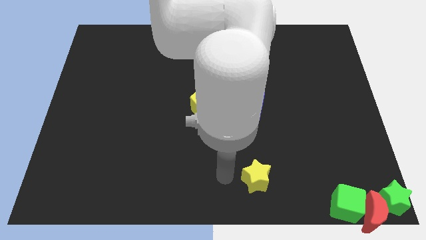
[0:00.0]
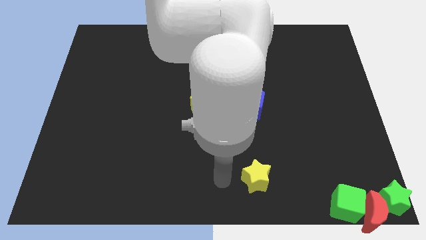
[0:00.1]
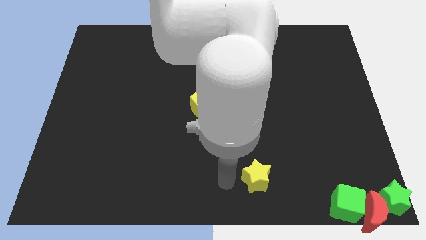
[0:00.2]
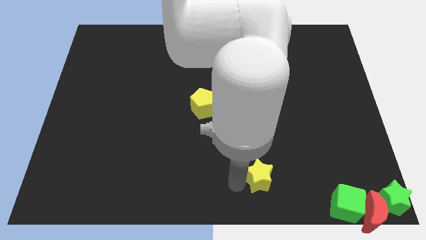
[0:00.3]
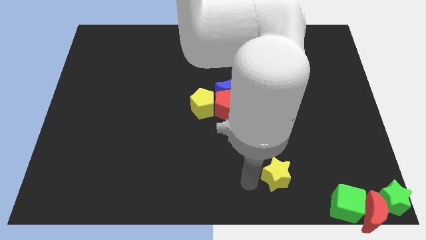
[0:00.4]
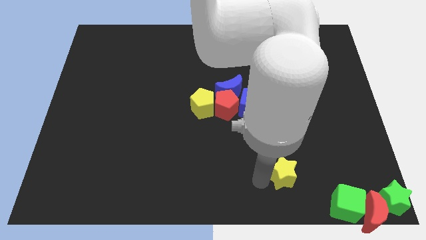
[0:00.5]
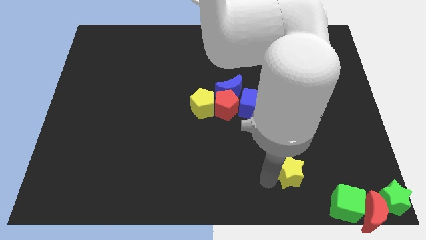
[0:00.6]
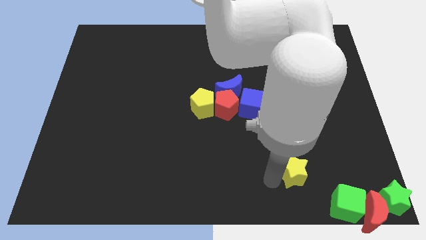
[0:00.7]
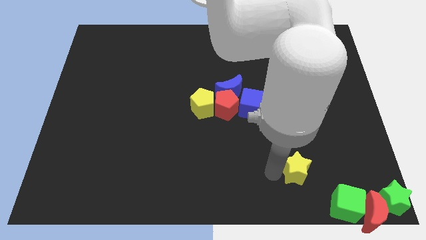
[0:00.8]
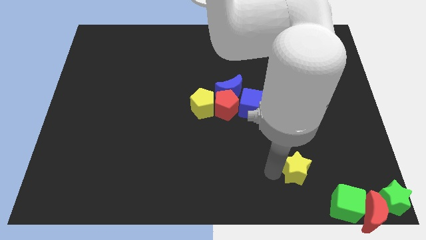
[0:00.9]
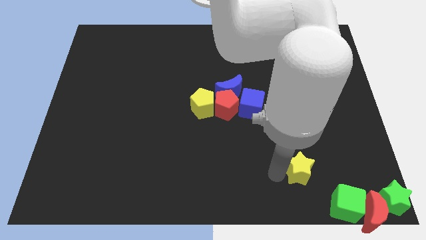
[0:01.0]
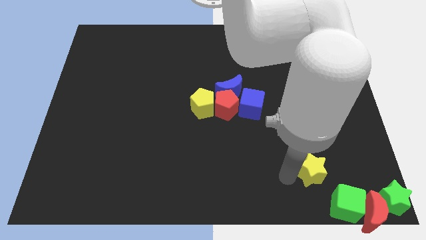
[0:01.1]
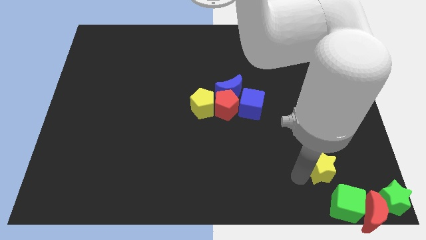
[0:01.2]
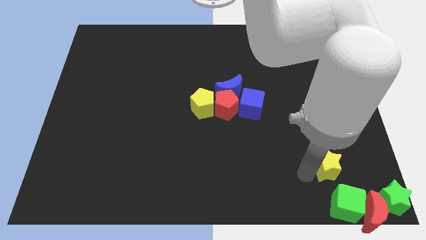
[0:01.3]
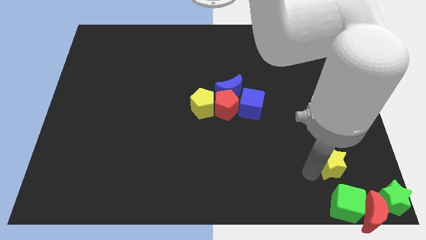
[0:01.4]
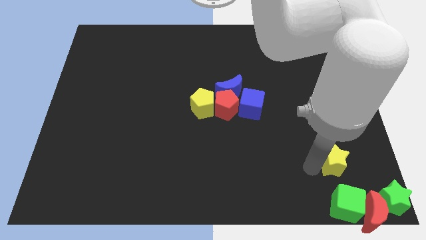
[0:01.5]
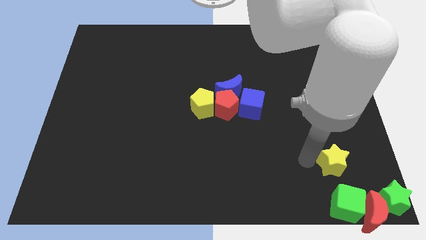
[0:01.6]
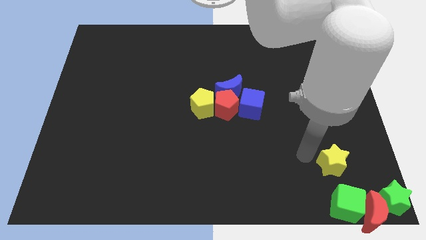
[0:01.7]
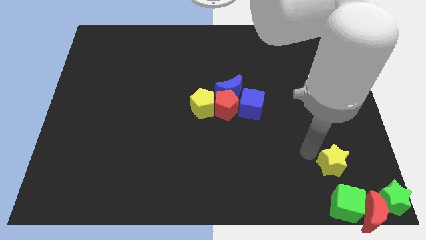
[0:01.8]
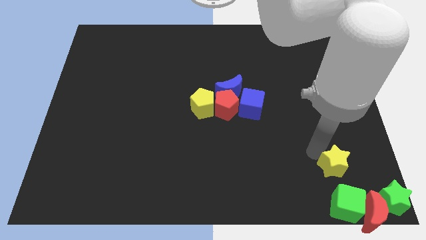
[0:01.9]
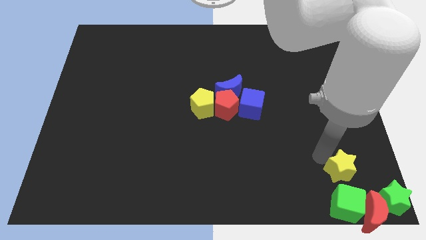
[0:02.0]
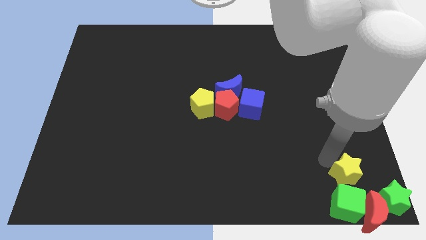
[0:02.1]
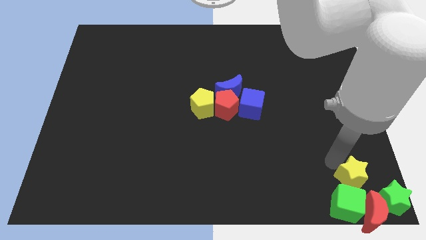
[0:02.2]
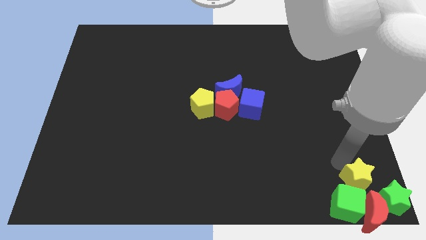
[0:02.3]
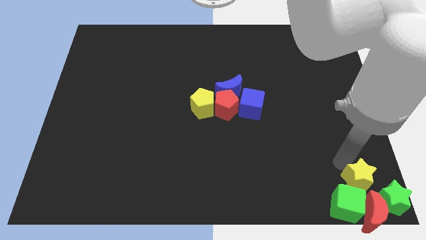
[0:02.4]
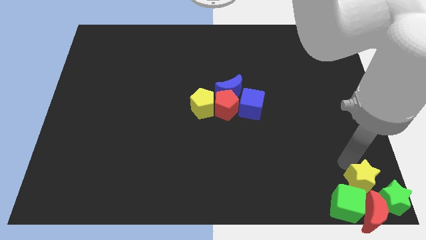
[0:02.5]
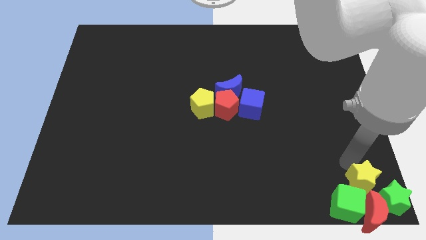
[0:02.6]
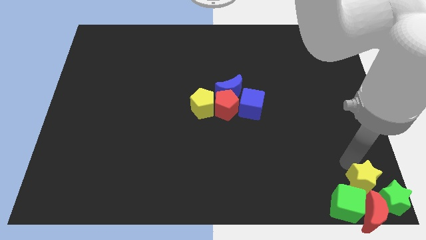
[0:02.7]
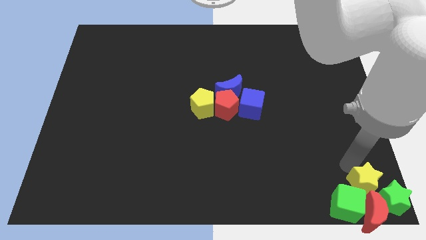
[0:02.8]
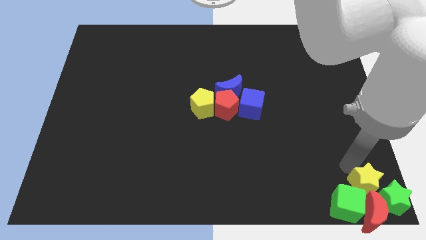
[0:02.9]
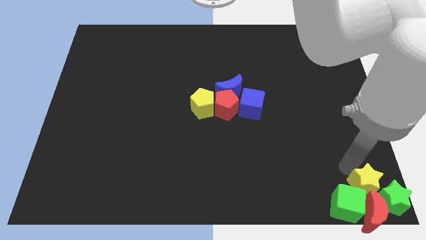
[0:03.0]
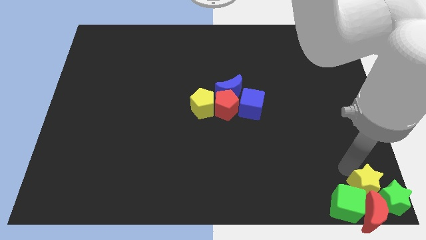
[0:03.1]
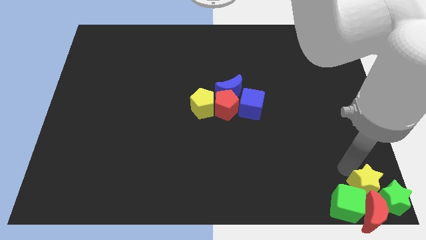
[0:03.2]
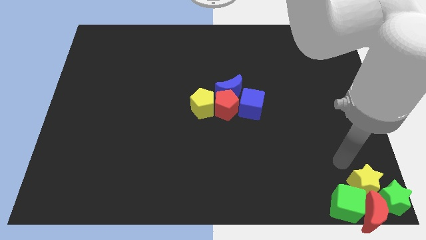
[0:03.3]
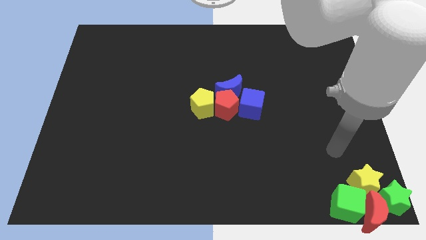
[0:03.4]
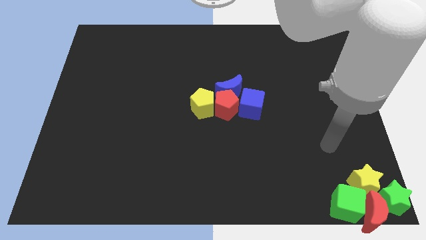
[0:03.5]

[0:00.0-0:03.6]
place yellow star above red moon

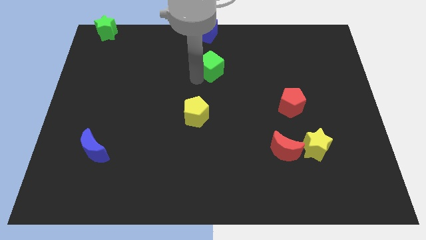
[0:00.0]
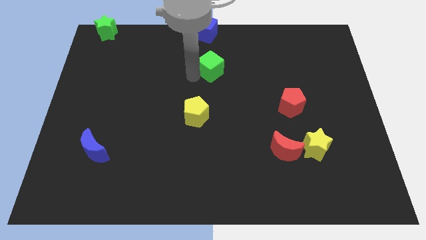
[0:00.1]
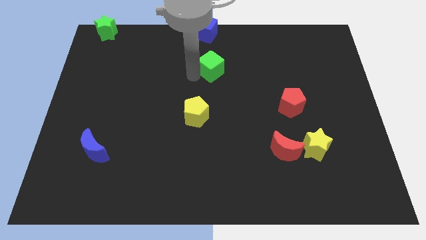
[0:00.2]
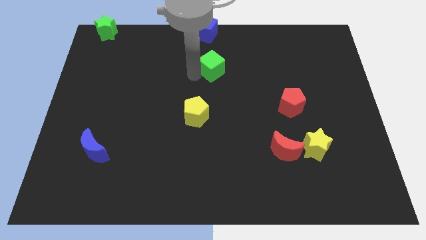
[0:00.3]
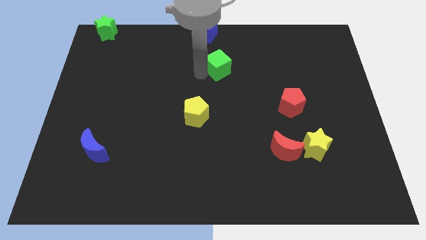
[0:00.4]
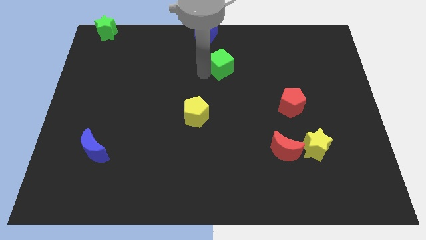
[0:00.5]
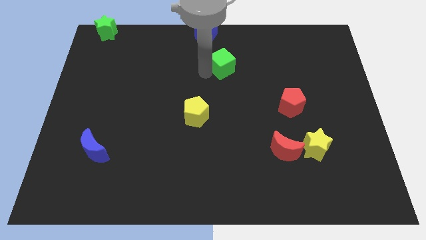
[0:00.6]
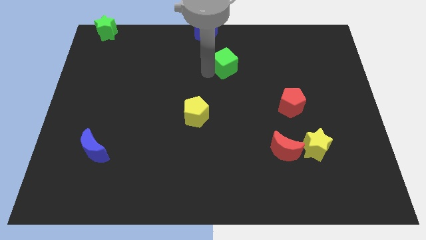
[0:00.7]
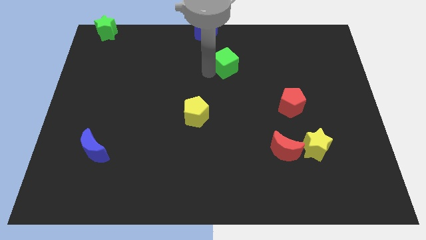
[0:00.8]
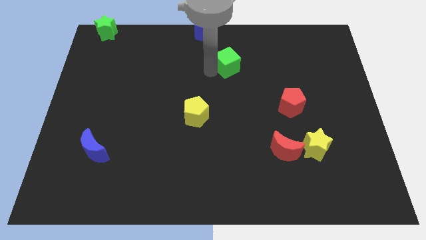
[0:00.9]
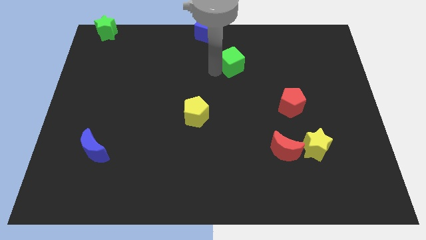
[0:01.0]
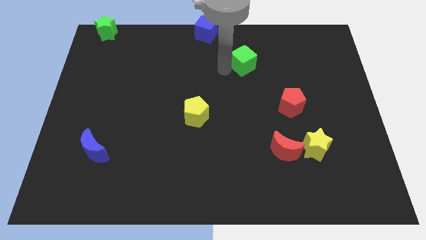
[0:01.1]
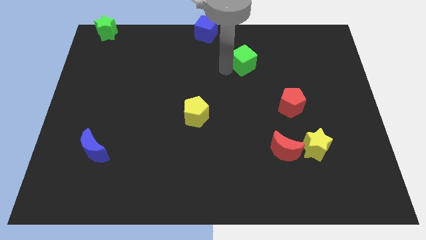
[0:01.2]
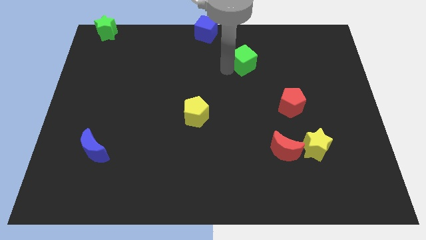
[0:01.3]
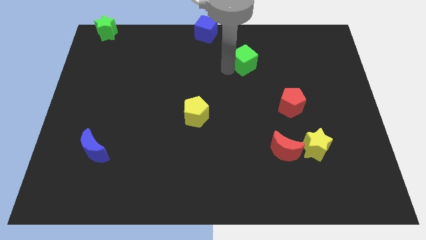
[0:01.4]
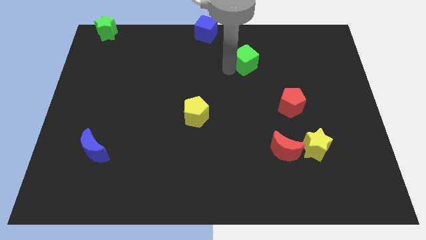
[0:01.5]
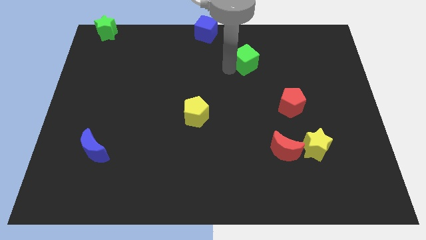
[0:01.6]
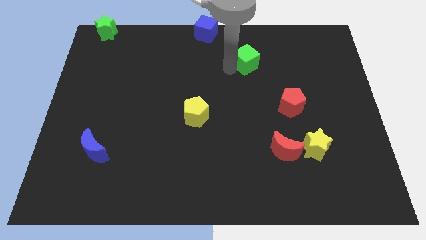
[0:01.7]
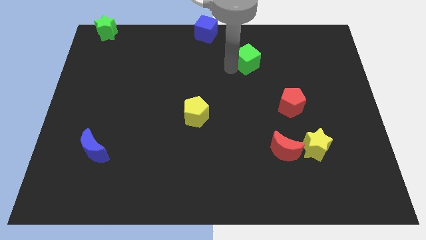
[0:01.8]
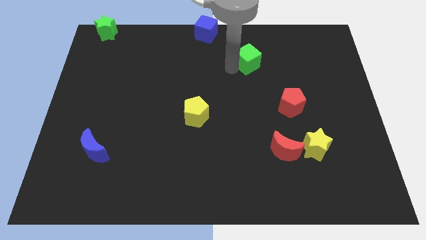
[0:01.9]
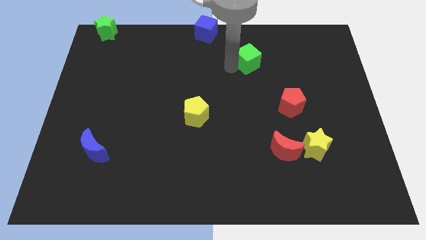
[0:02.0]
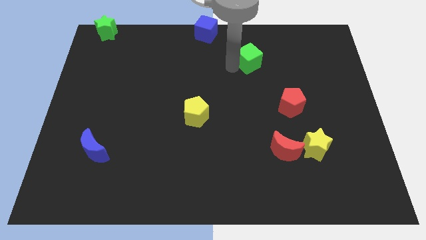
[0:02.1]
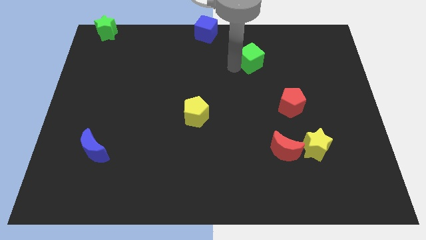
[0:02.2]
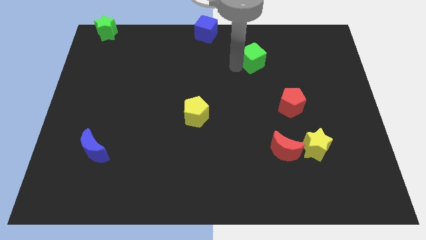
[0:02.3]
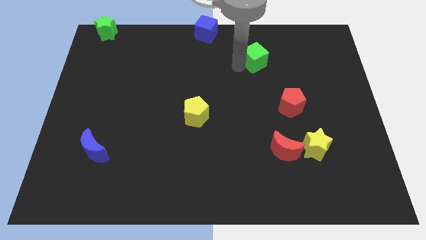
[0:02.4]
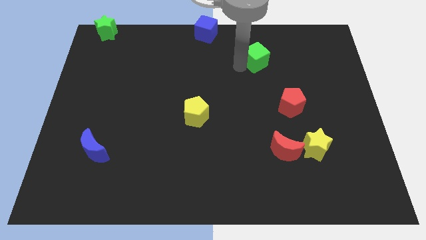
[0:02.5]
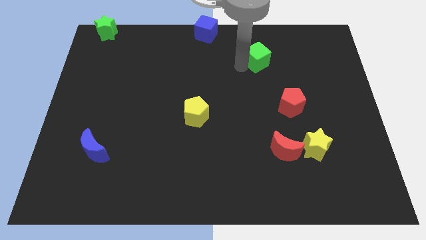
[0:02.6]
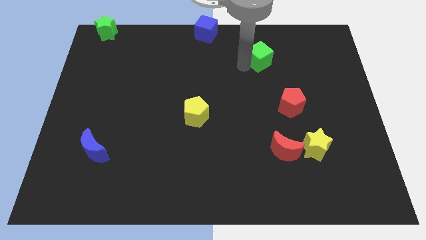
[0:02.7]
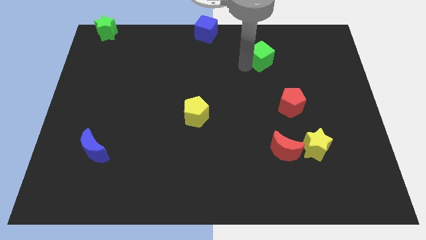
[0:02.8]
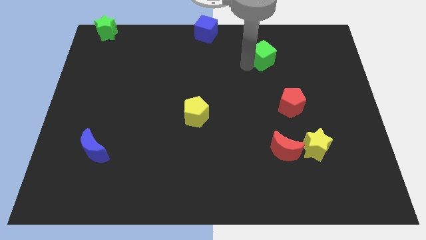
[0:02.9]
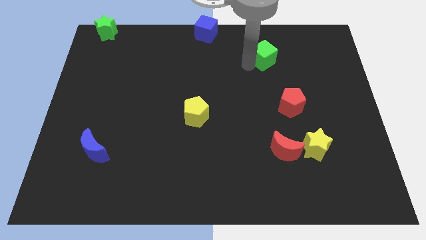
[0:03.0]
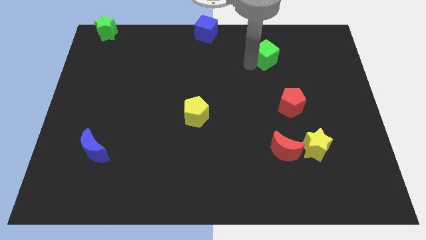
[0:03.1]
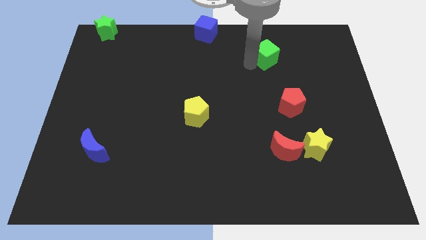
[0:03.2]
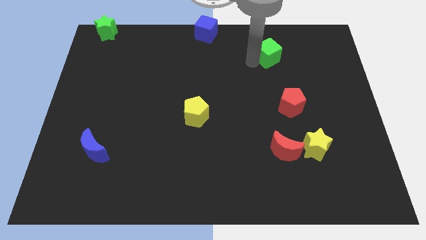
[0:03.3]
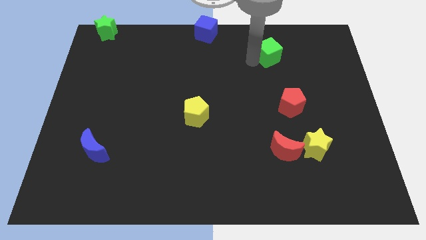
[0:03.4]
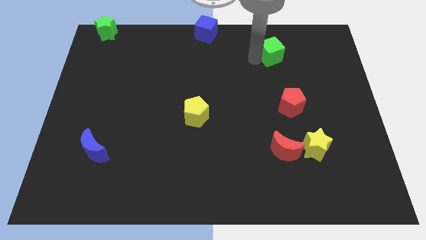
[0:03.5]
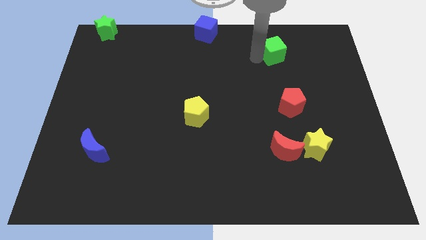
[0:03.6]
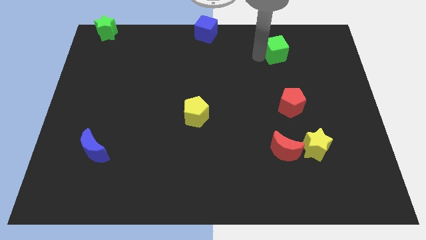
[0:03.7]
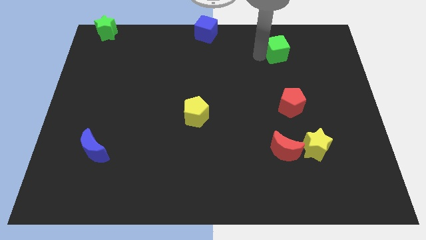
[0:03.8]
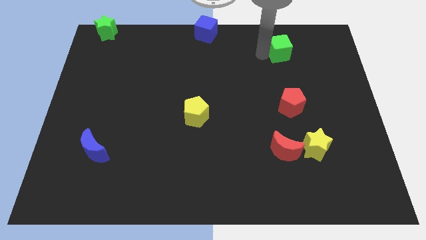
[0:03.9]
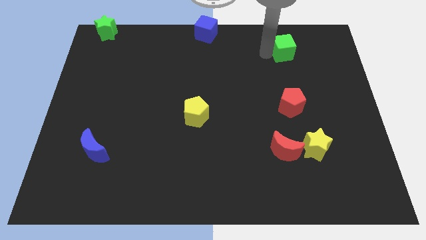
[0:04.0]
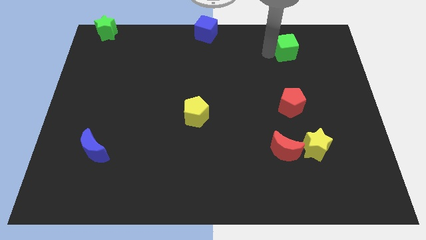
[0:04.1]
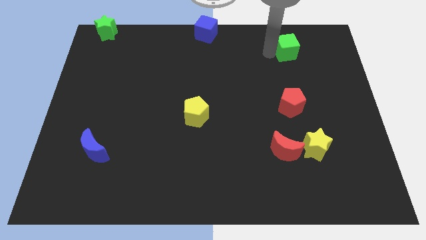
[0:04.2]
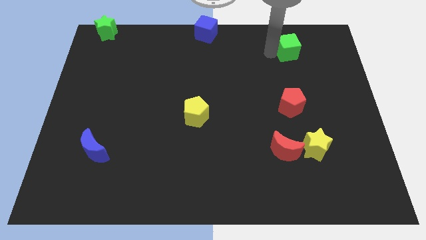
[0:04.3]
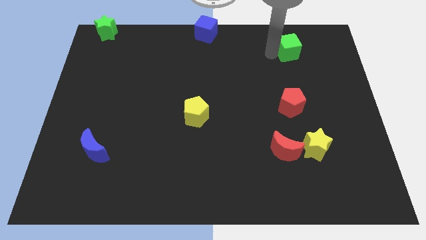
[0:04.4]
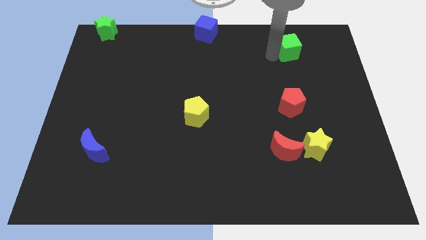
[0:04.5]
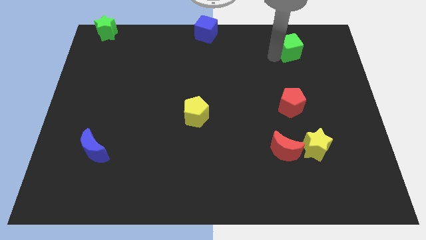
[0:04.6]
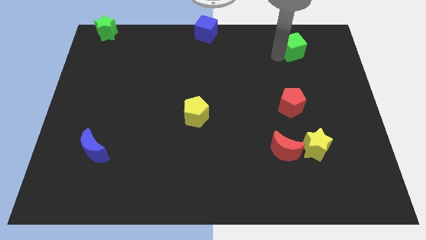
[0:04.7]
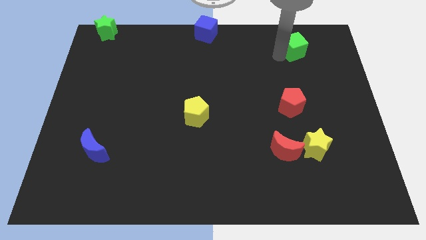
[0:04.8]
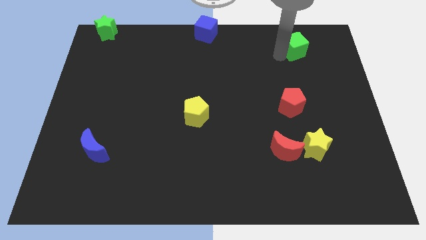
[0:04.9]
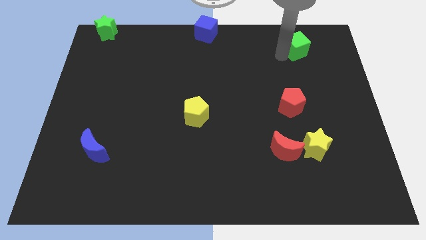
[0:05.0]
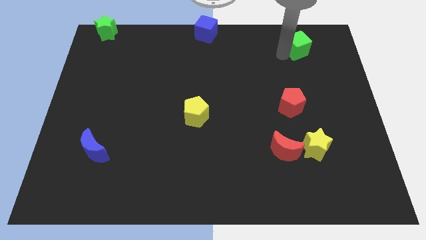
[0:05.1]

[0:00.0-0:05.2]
slide the green cube above the red pentagon

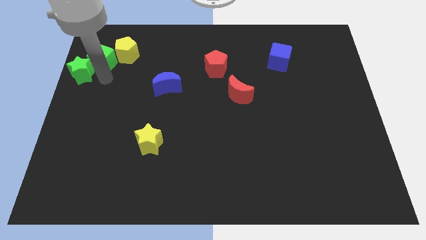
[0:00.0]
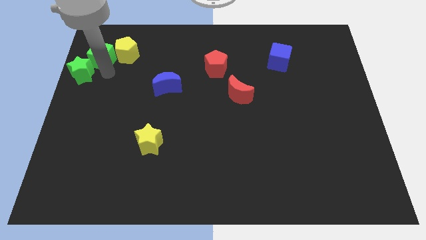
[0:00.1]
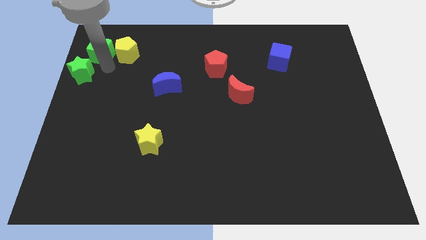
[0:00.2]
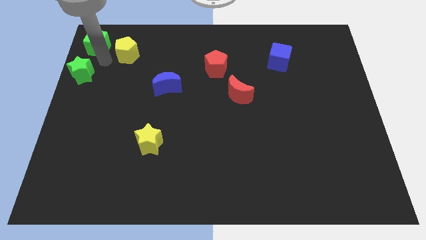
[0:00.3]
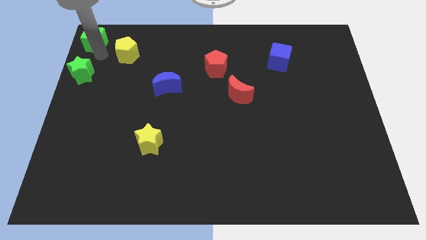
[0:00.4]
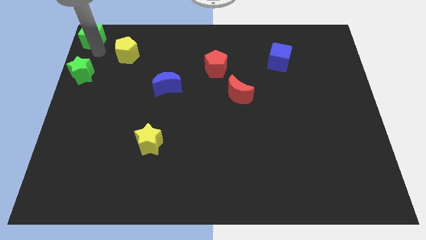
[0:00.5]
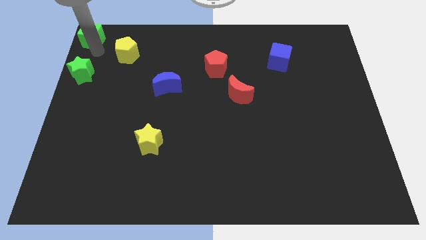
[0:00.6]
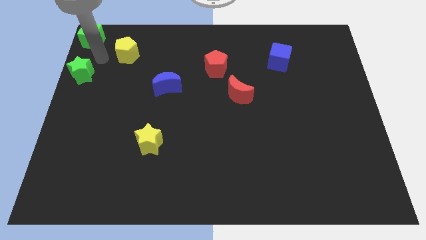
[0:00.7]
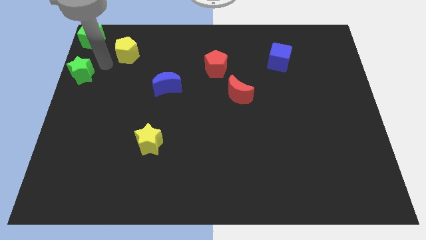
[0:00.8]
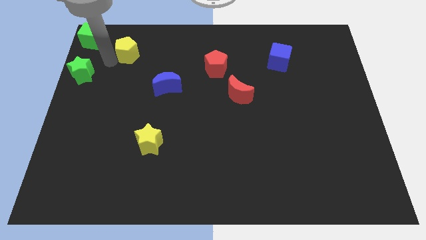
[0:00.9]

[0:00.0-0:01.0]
push the green cube to the left corner of the board
